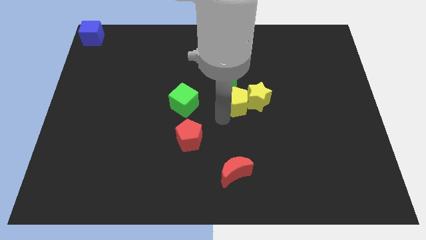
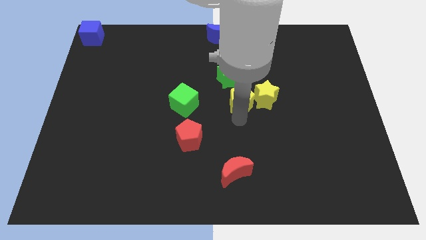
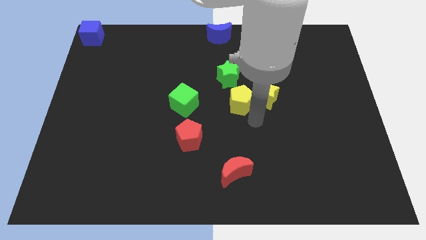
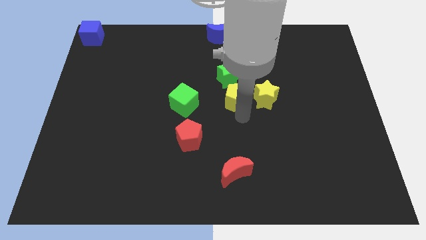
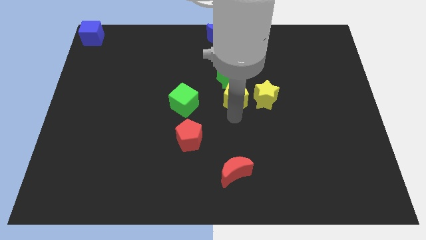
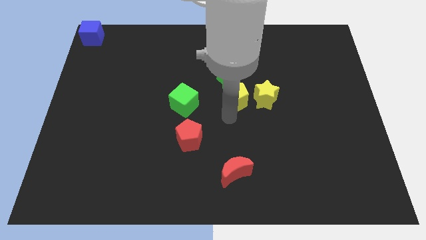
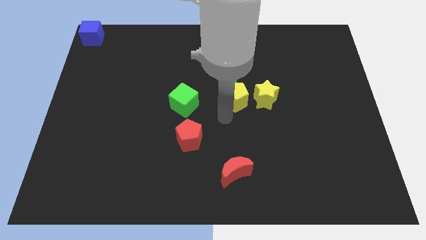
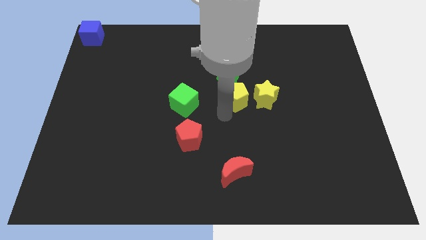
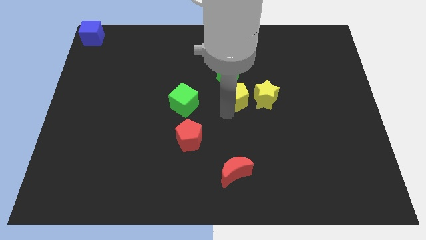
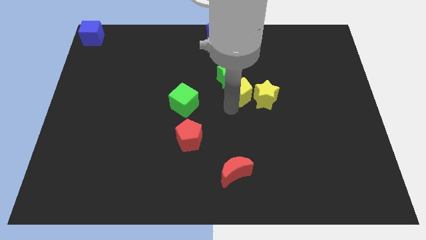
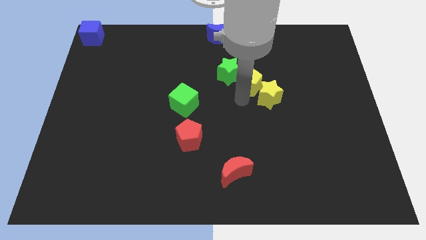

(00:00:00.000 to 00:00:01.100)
place the yellow pentagon in between the green and yellow stars

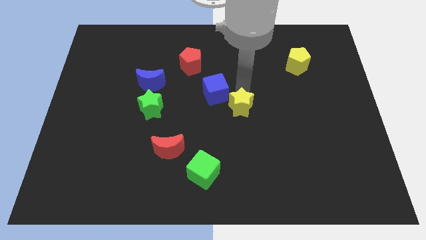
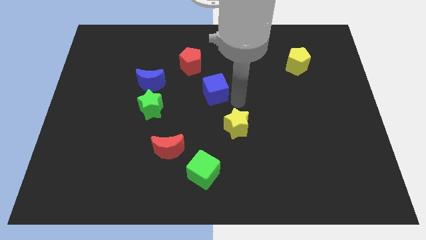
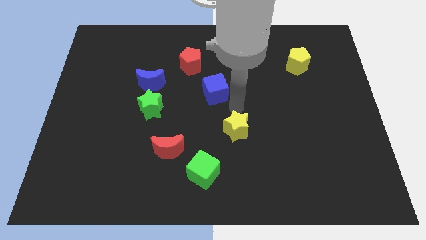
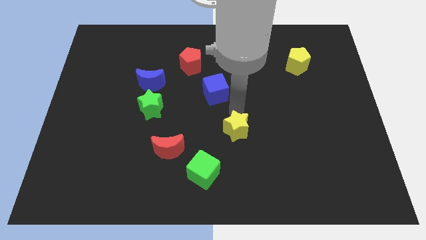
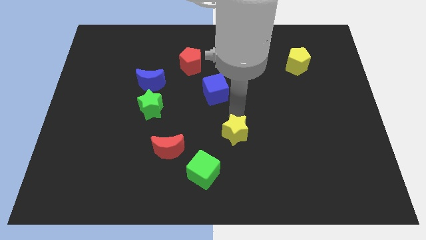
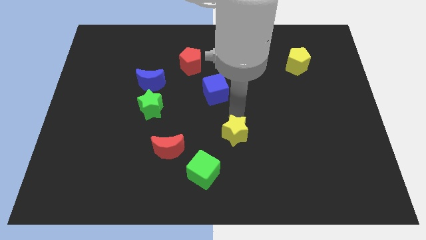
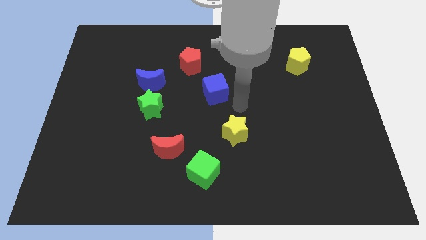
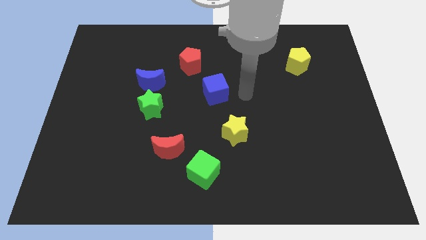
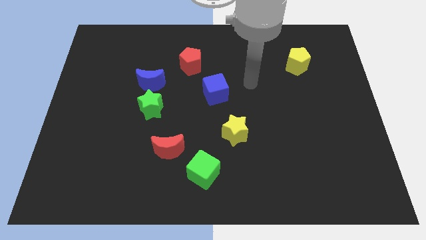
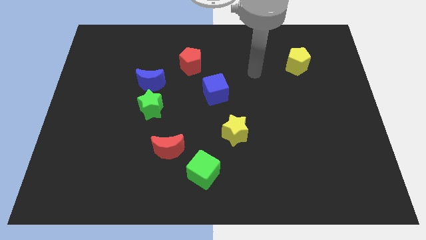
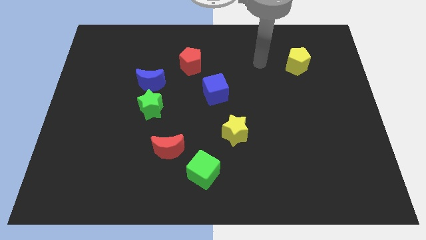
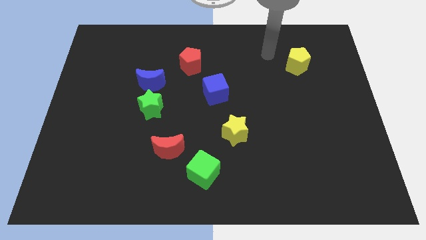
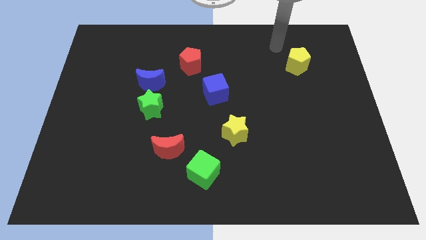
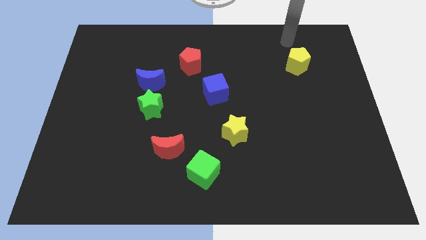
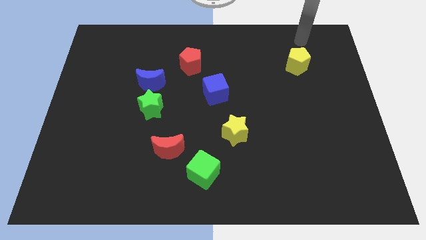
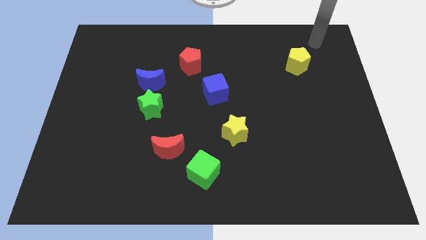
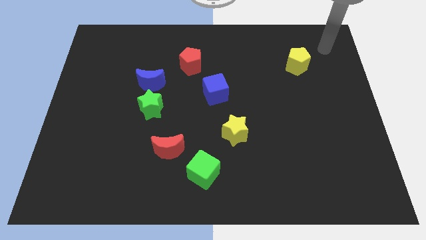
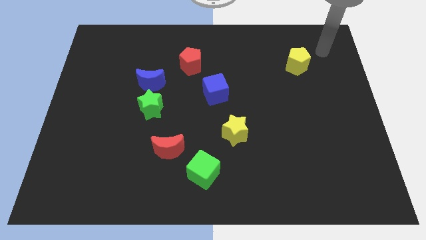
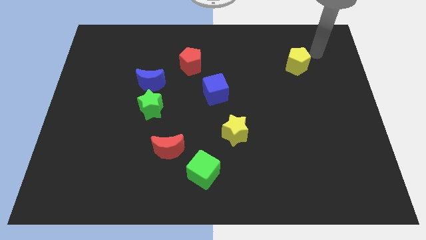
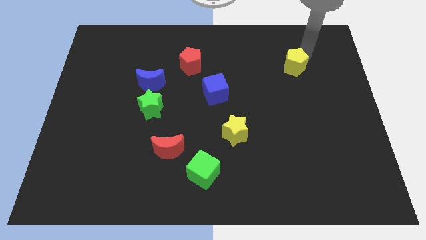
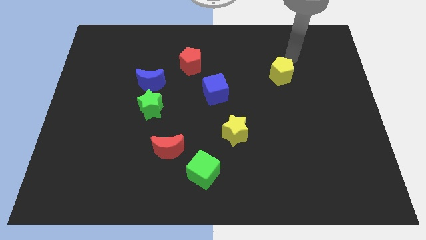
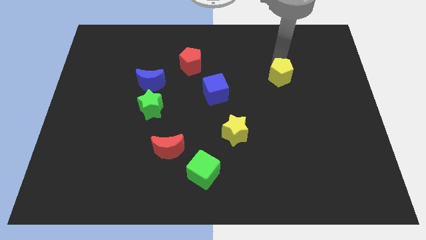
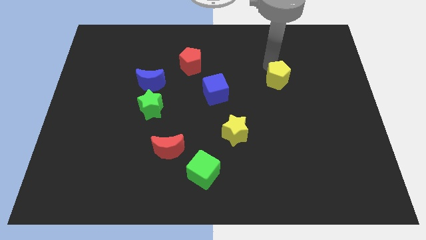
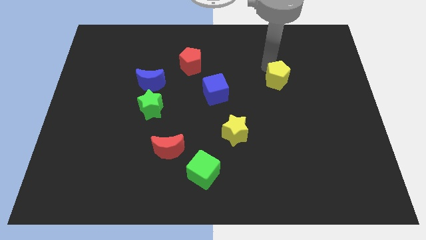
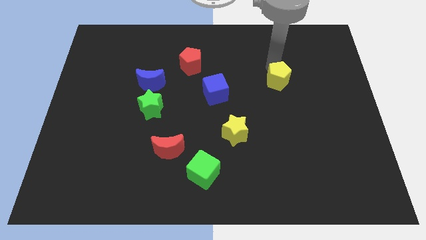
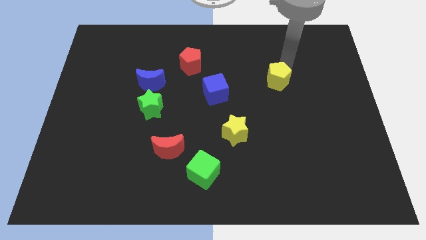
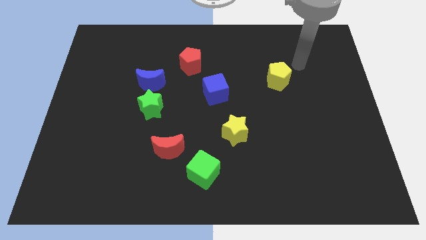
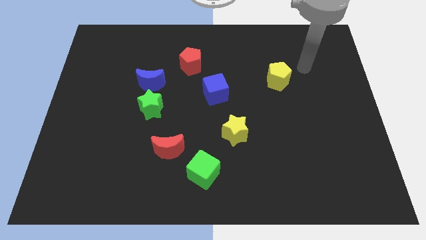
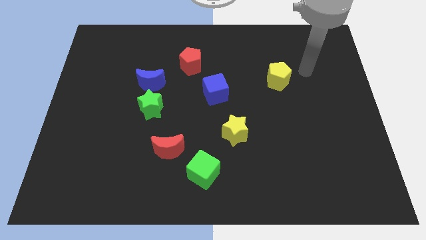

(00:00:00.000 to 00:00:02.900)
place the yellow pentagon right to the blue cube

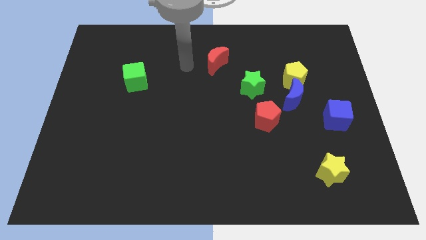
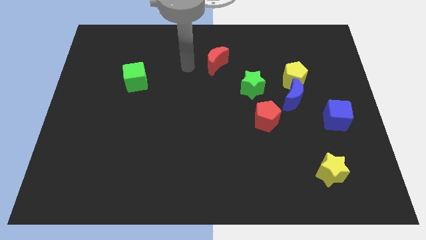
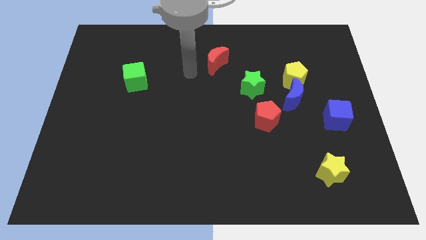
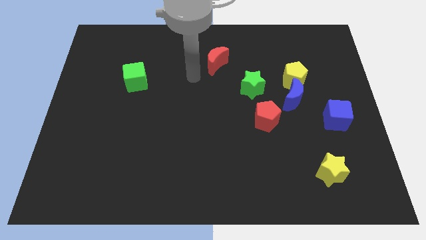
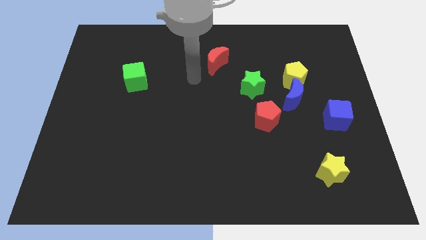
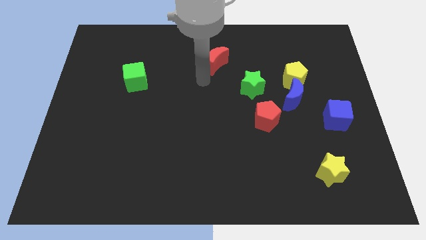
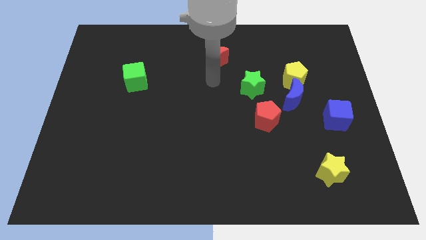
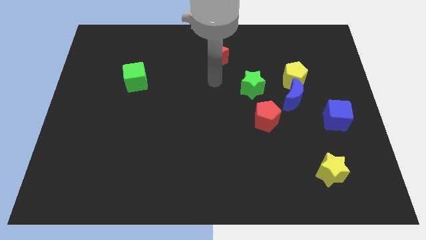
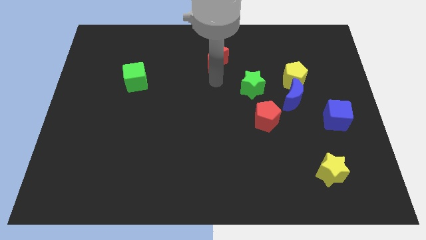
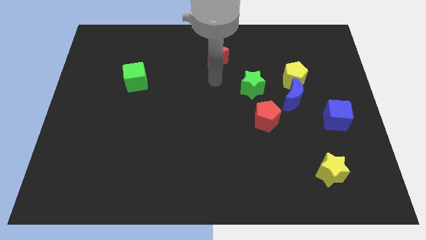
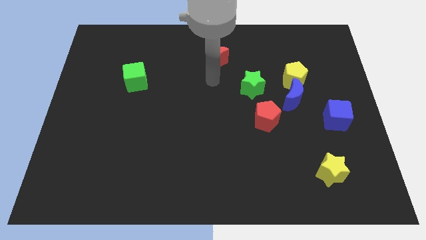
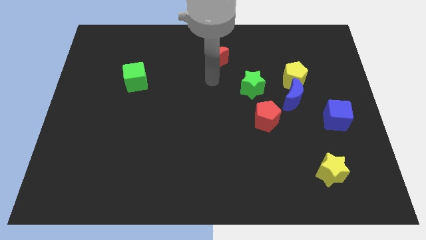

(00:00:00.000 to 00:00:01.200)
go near the red moon

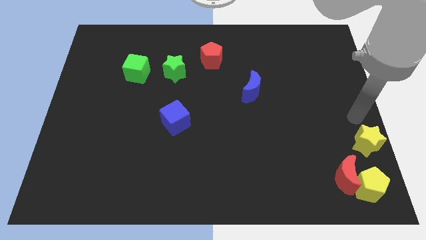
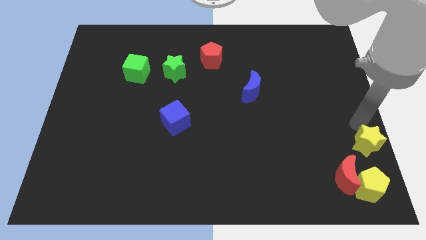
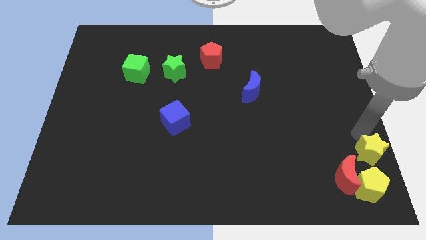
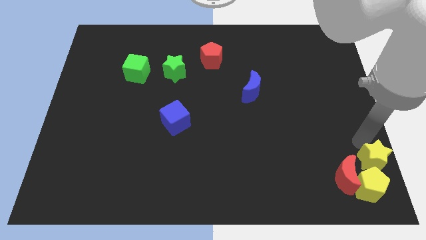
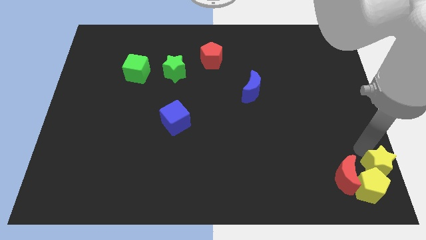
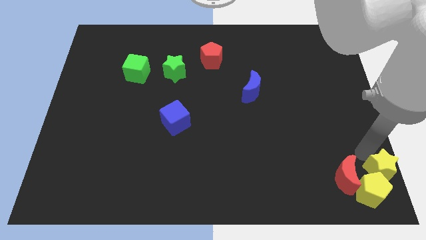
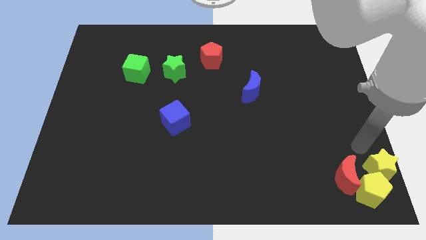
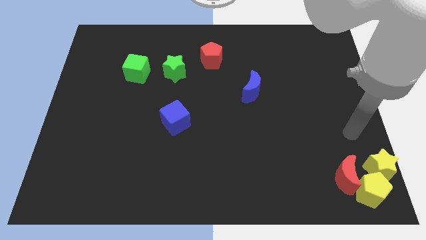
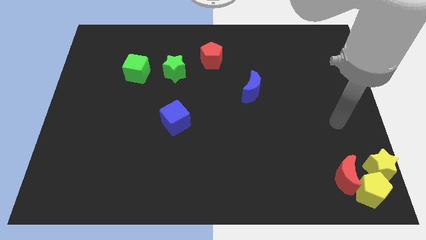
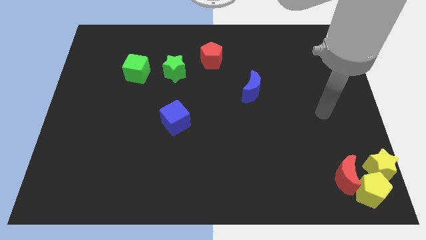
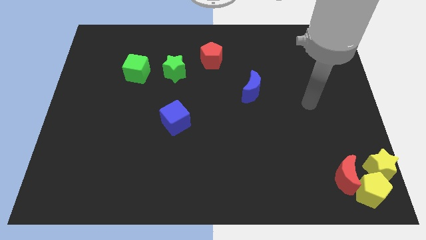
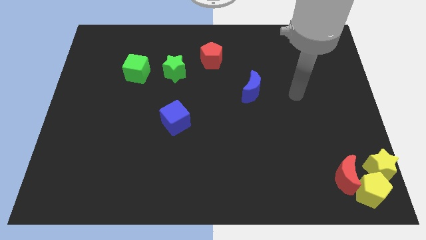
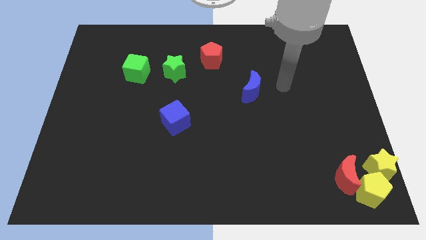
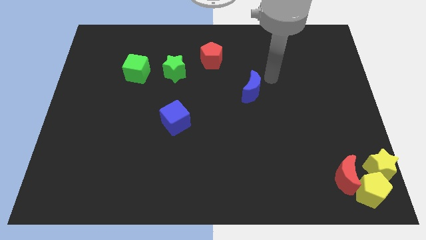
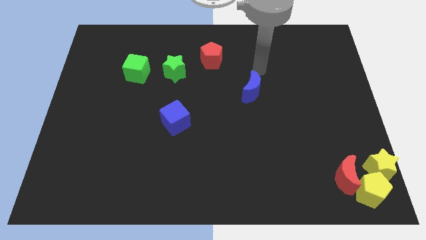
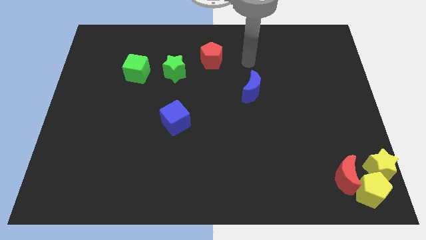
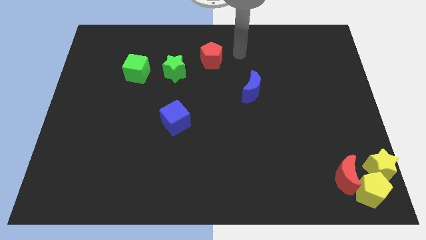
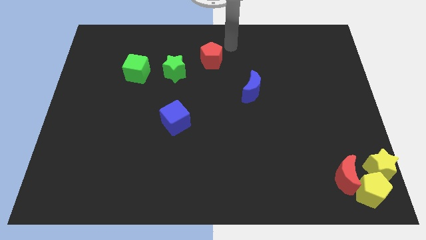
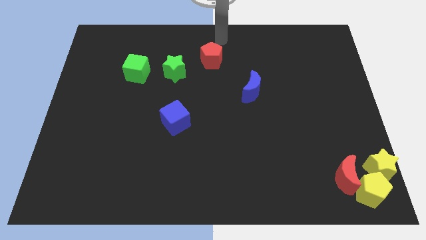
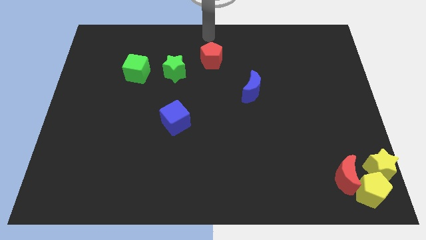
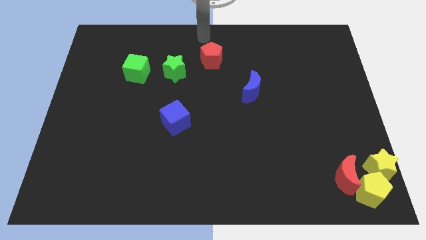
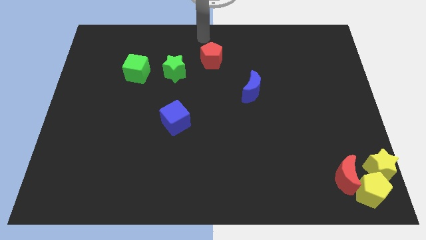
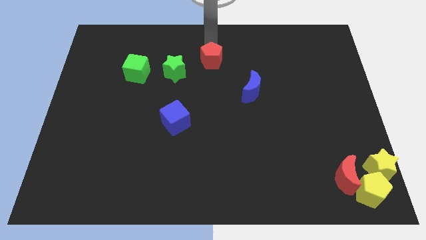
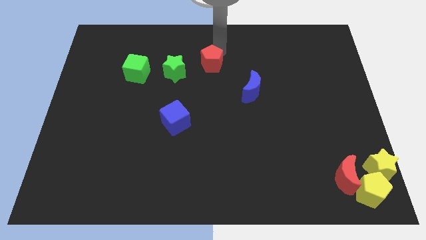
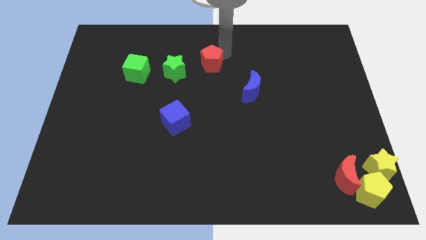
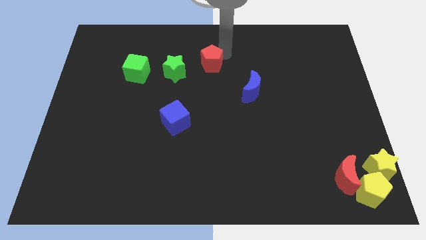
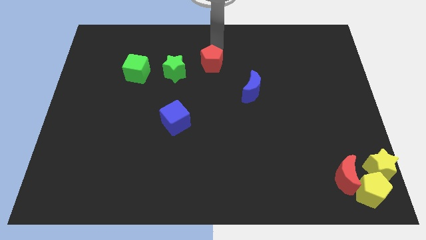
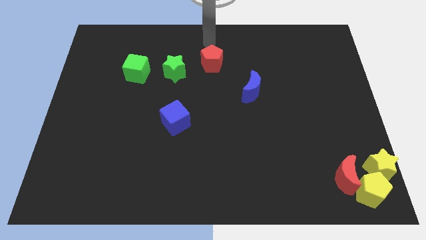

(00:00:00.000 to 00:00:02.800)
move your hand to the top center

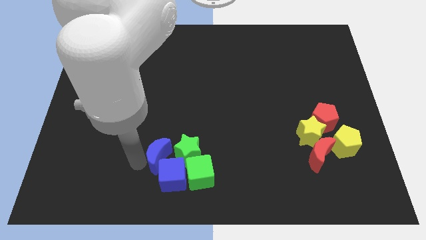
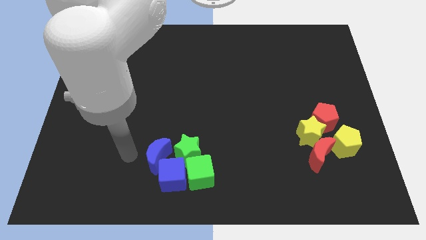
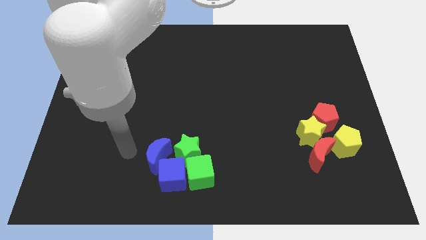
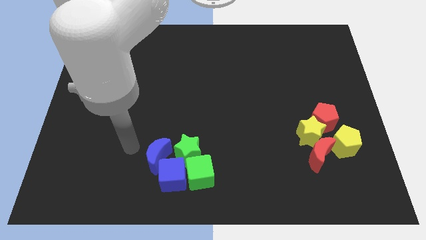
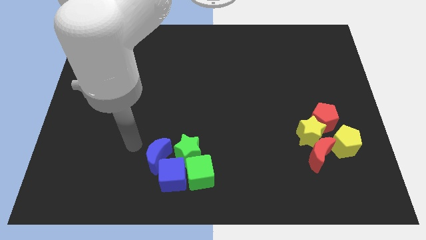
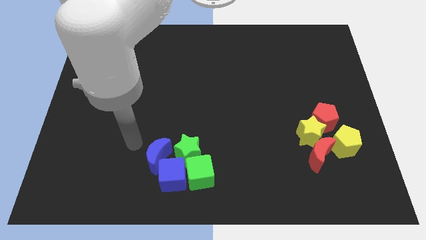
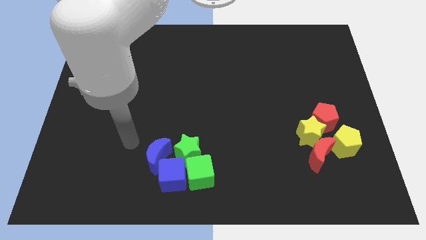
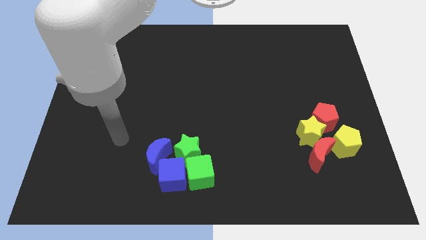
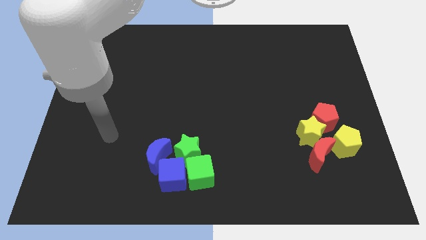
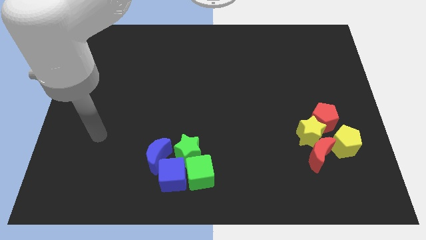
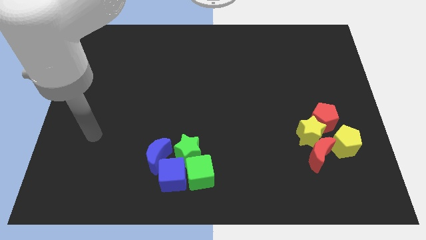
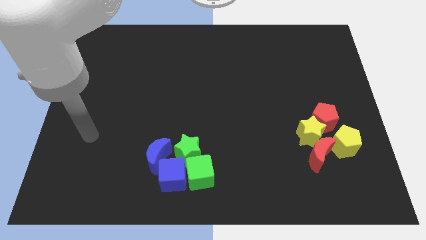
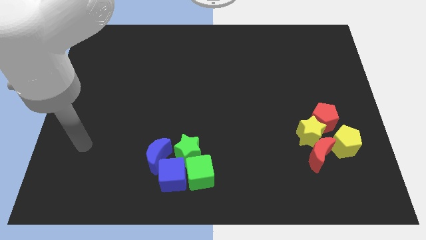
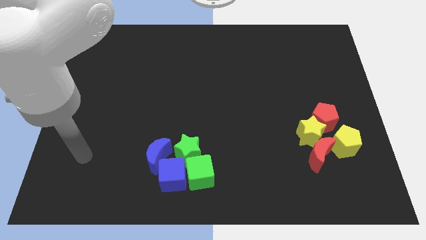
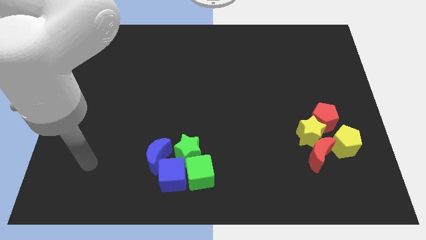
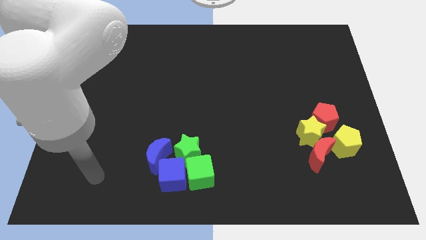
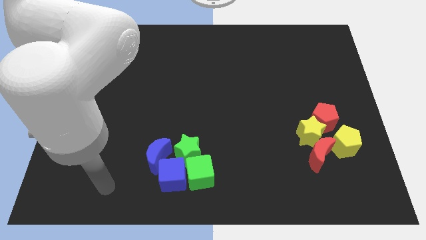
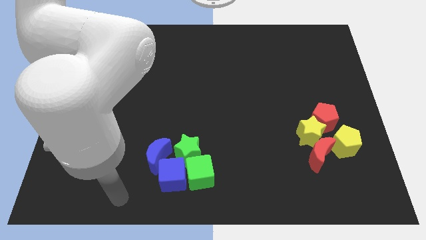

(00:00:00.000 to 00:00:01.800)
move your arm away from the blue moon
